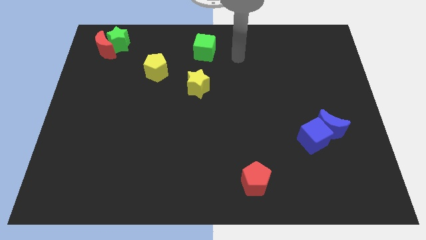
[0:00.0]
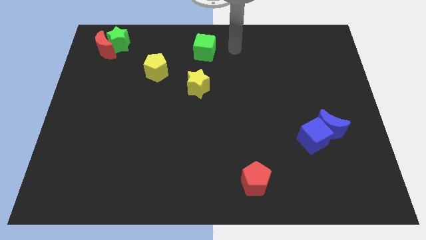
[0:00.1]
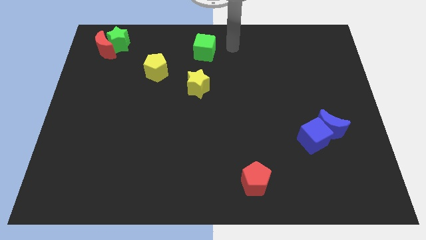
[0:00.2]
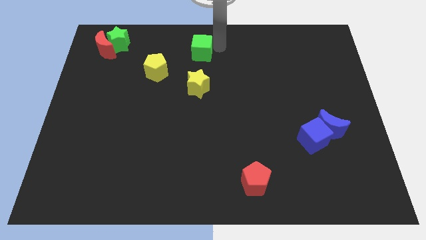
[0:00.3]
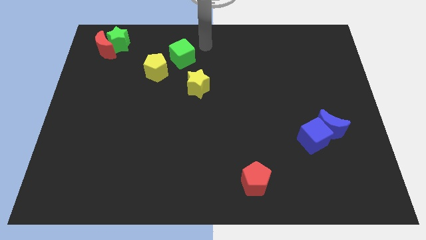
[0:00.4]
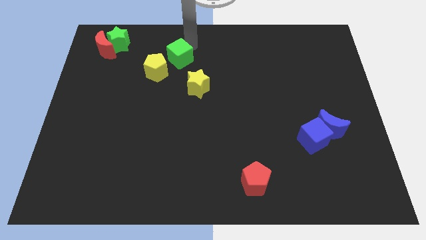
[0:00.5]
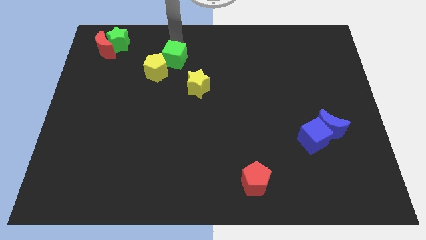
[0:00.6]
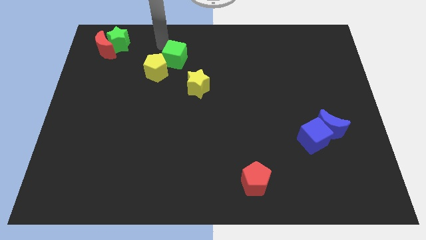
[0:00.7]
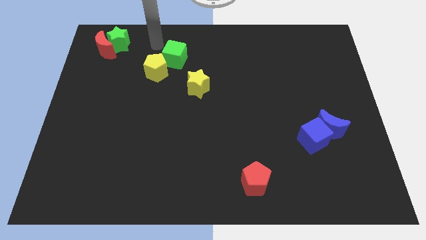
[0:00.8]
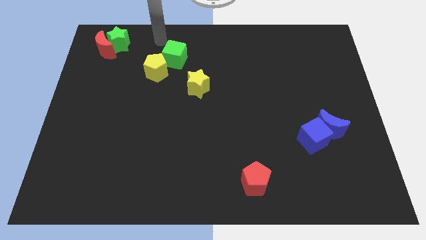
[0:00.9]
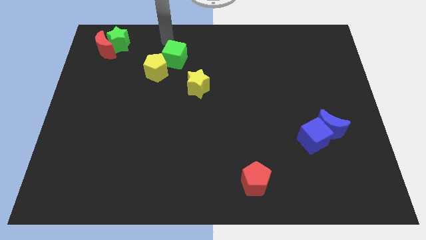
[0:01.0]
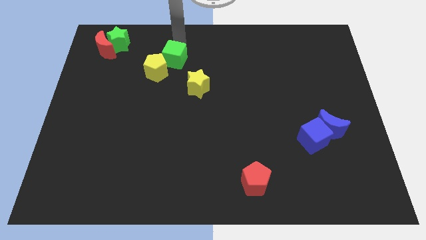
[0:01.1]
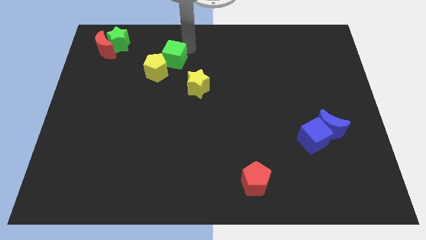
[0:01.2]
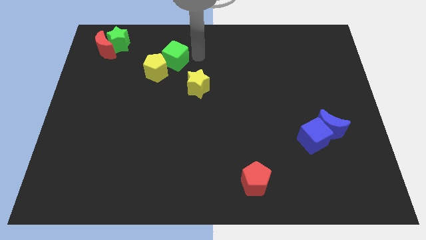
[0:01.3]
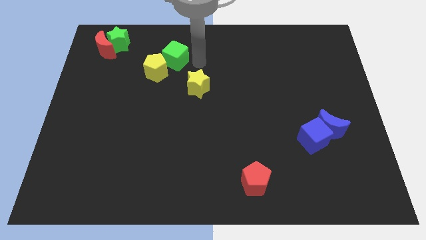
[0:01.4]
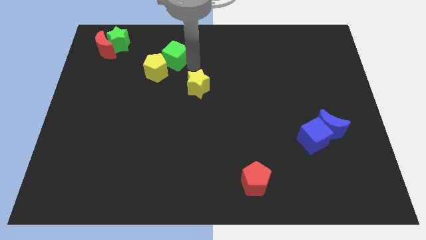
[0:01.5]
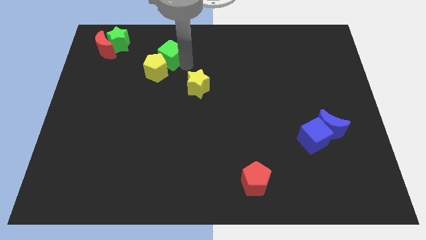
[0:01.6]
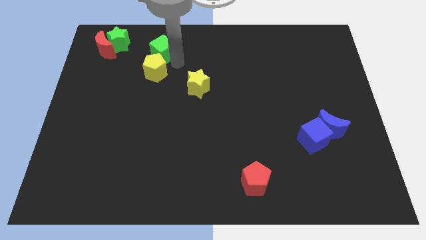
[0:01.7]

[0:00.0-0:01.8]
slide the green cube to the top of yellow pentagon

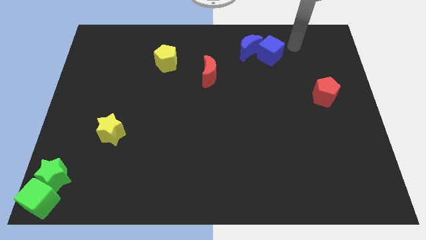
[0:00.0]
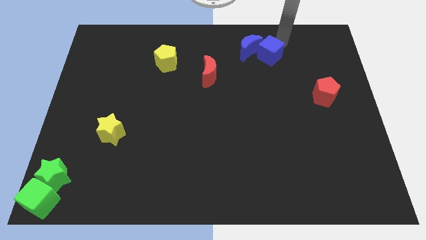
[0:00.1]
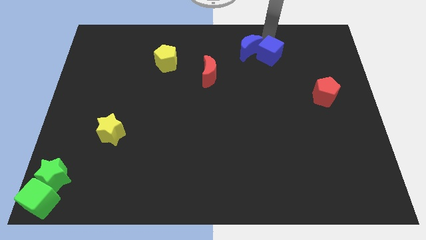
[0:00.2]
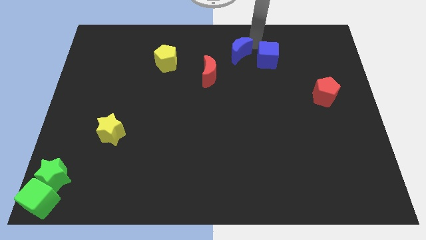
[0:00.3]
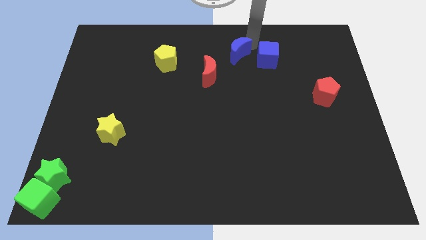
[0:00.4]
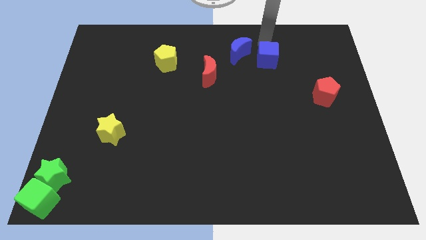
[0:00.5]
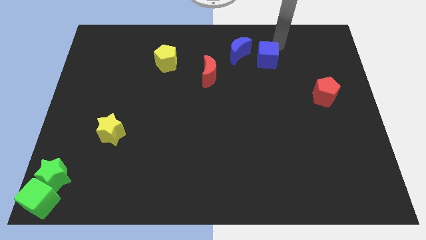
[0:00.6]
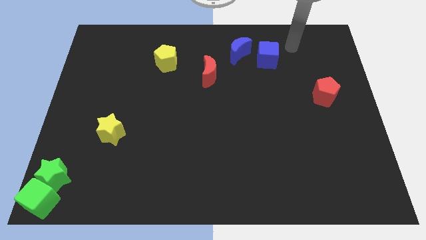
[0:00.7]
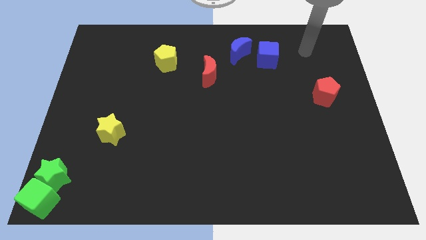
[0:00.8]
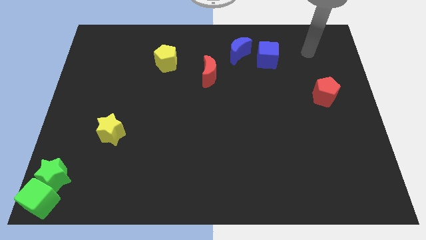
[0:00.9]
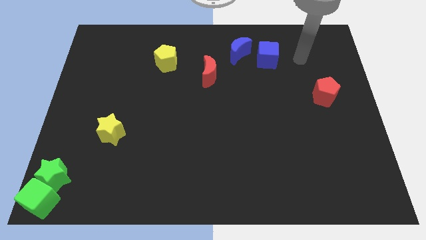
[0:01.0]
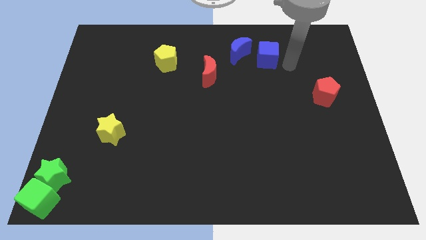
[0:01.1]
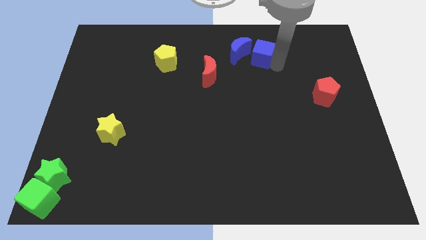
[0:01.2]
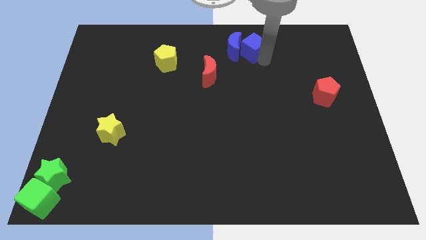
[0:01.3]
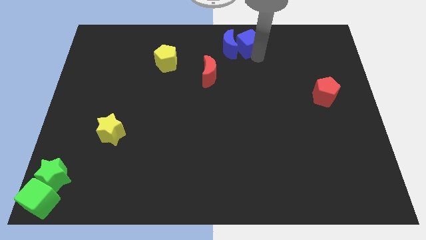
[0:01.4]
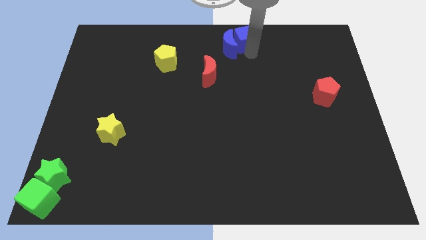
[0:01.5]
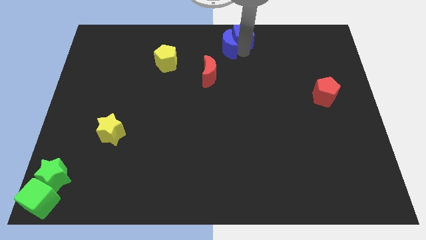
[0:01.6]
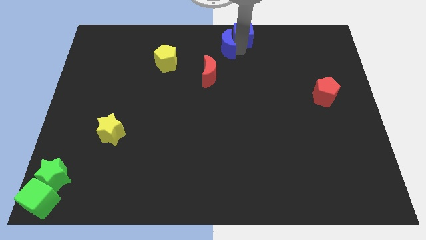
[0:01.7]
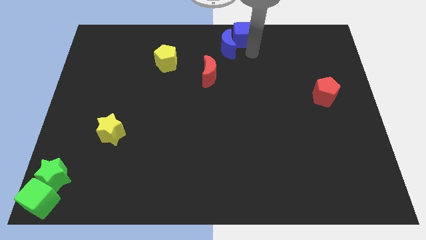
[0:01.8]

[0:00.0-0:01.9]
move the blue cube to the top center of the board

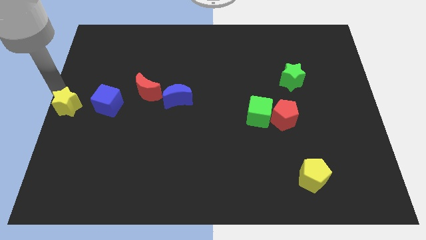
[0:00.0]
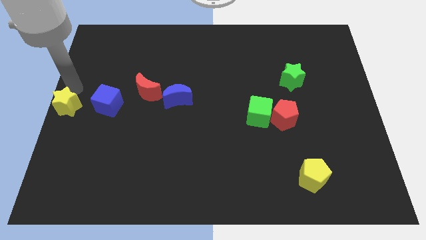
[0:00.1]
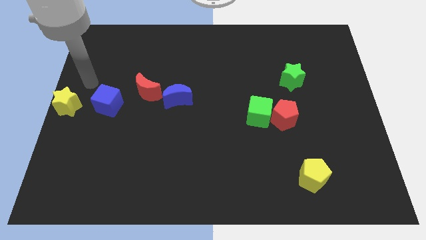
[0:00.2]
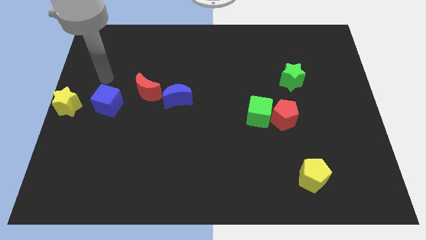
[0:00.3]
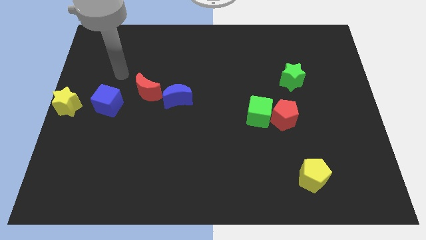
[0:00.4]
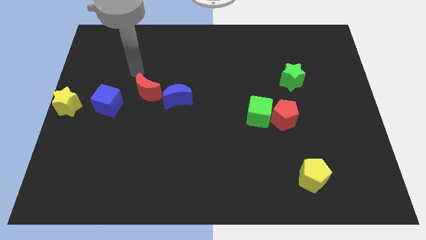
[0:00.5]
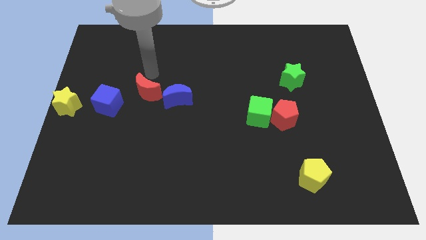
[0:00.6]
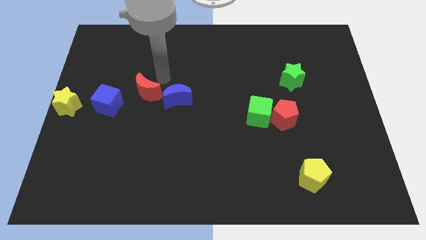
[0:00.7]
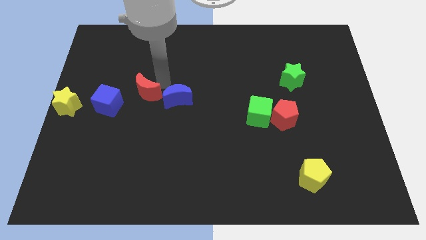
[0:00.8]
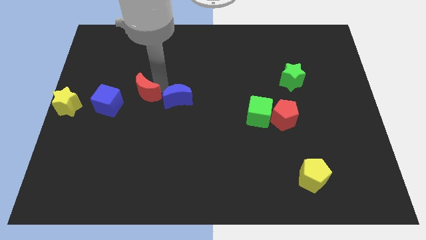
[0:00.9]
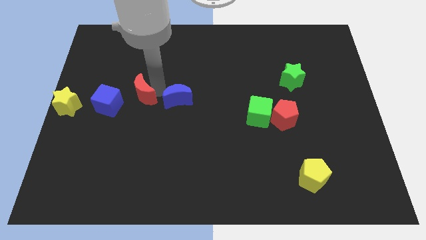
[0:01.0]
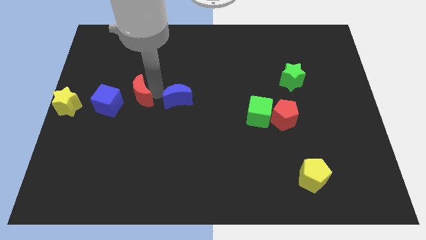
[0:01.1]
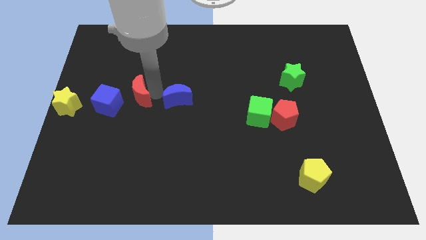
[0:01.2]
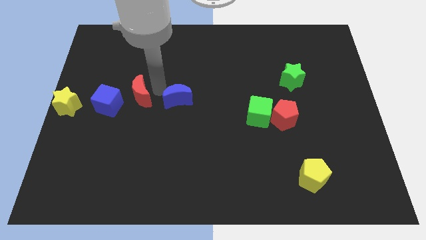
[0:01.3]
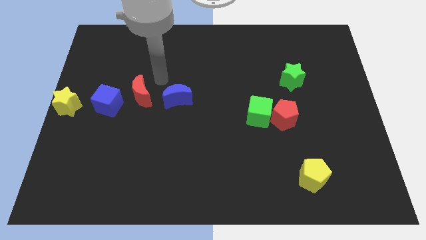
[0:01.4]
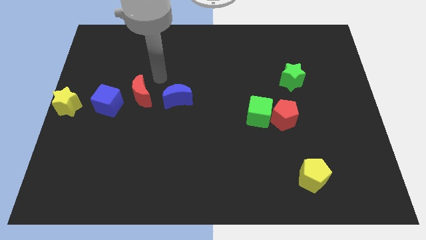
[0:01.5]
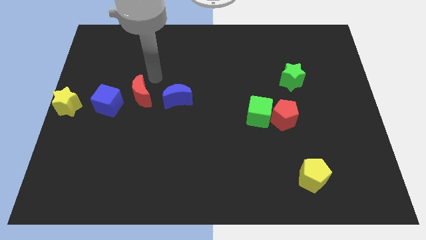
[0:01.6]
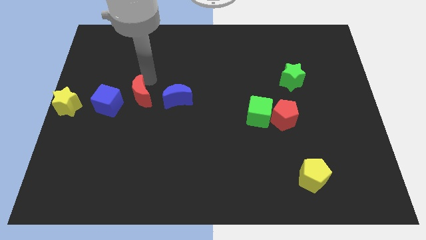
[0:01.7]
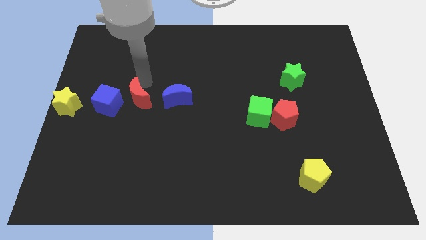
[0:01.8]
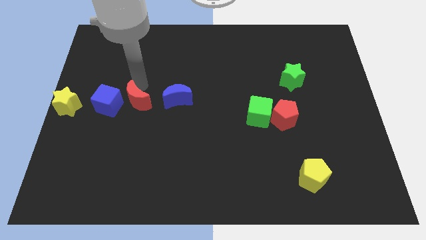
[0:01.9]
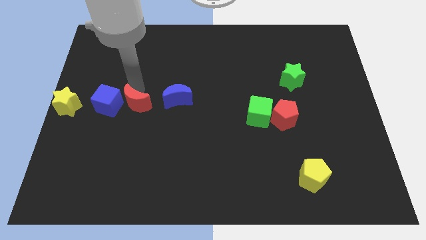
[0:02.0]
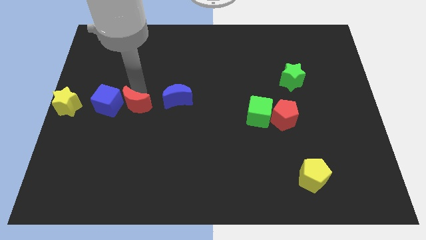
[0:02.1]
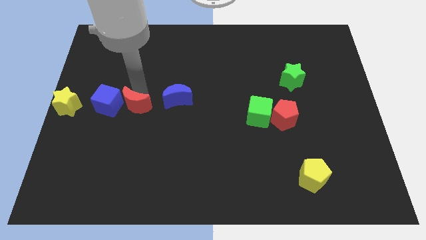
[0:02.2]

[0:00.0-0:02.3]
place the red moon in between the blue blocks

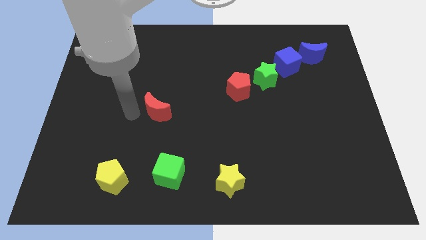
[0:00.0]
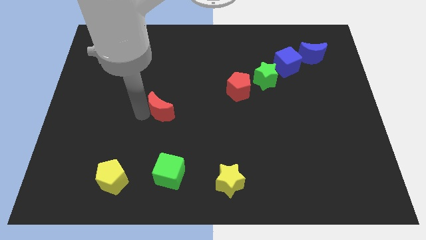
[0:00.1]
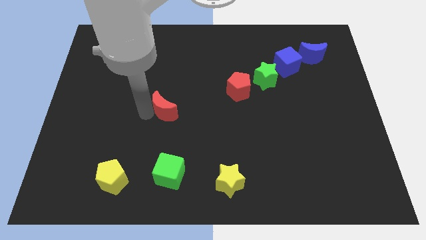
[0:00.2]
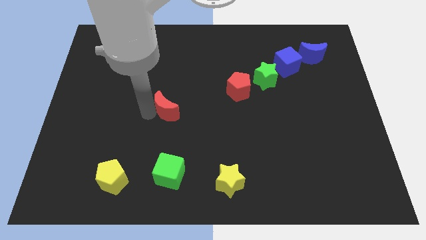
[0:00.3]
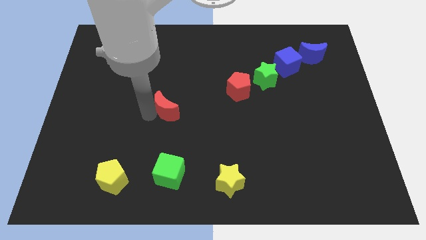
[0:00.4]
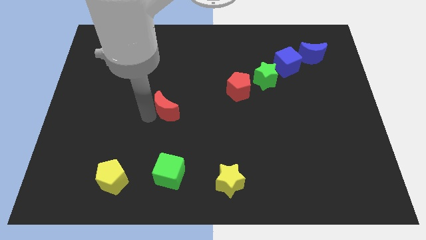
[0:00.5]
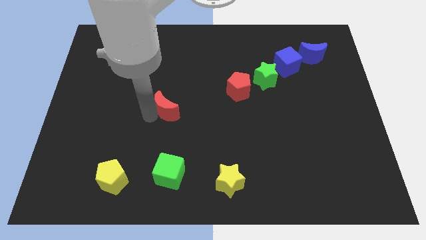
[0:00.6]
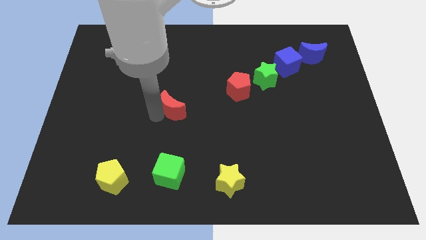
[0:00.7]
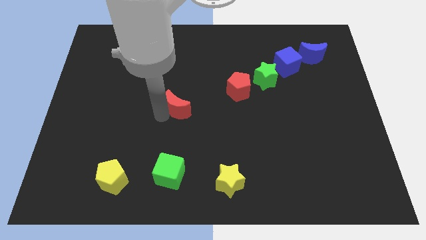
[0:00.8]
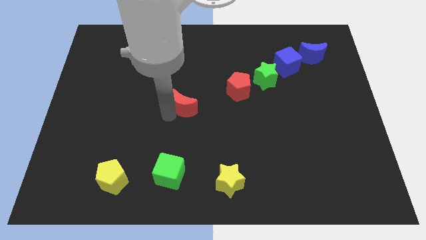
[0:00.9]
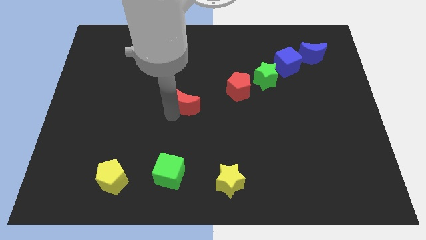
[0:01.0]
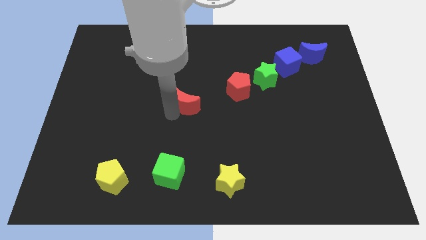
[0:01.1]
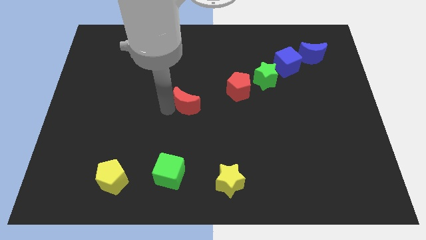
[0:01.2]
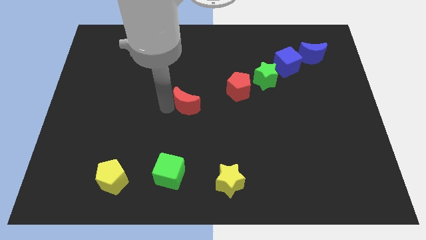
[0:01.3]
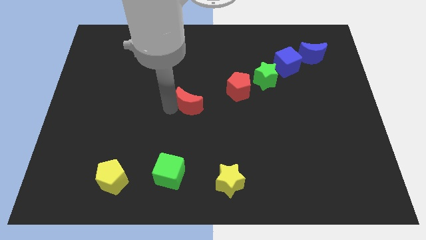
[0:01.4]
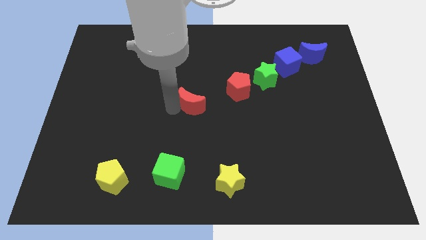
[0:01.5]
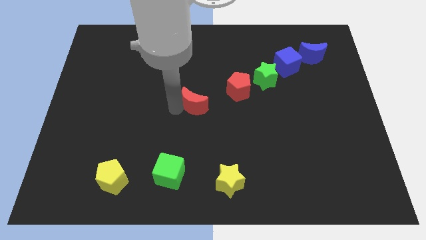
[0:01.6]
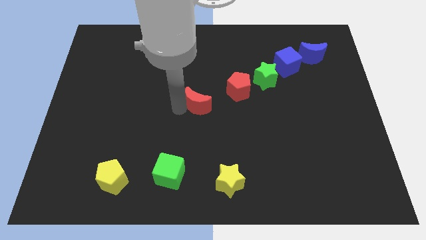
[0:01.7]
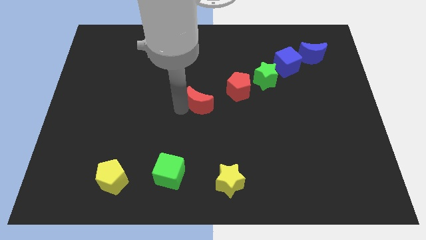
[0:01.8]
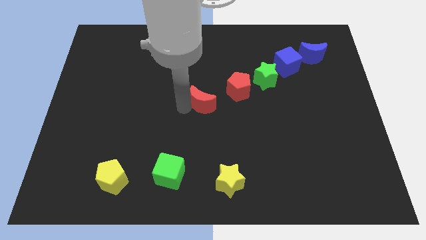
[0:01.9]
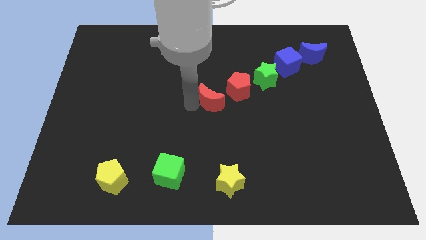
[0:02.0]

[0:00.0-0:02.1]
place red moon at the center

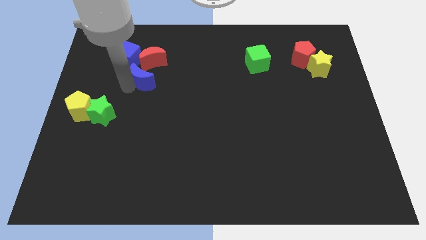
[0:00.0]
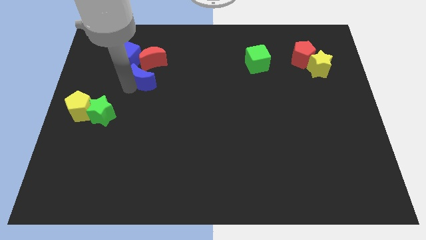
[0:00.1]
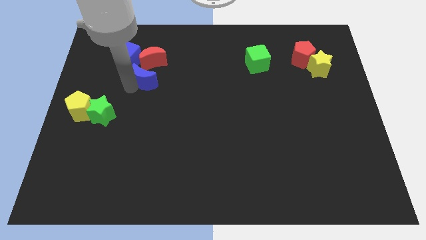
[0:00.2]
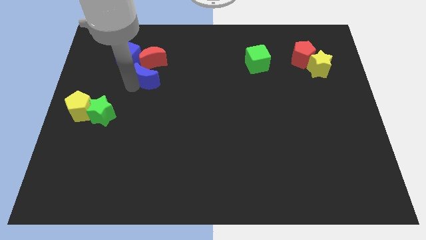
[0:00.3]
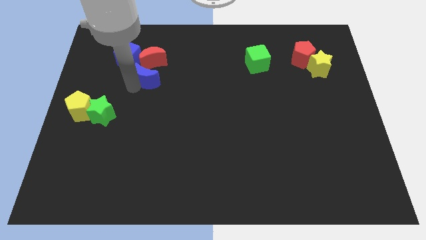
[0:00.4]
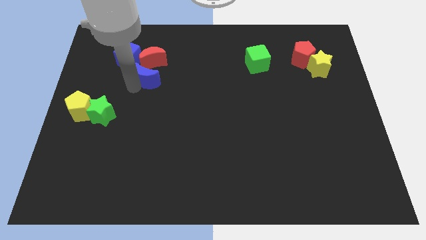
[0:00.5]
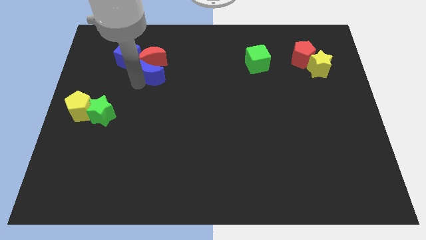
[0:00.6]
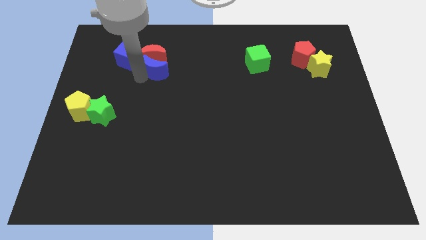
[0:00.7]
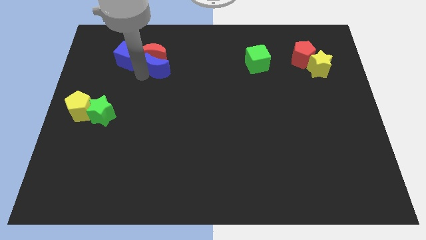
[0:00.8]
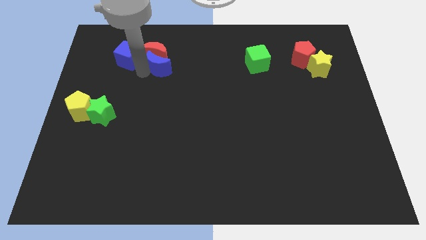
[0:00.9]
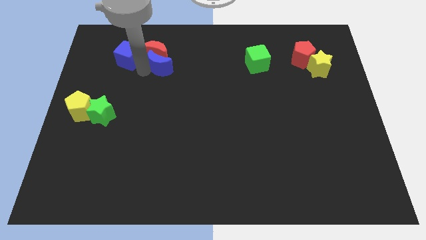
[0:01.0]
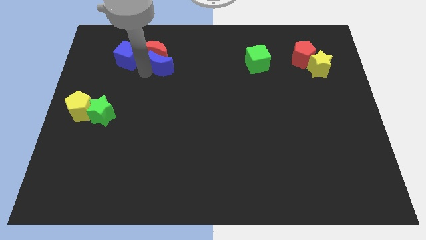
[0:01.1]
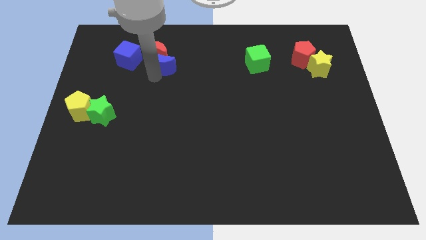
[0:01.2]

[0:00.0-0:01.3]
place the blue moon parallel right to the blue cube
